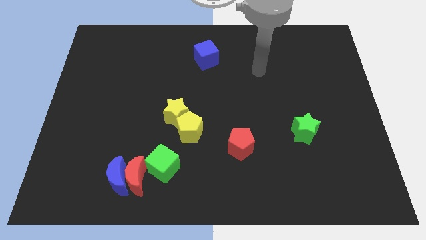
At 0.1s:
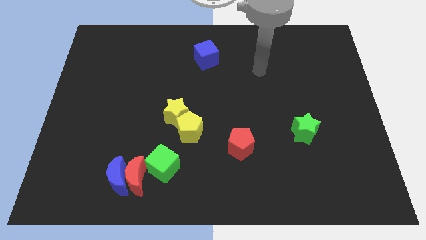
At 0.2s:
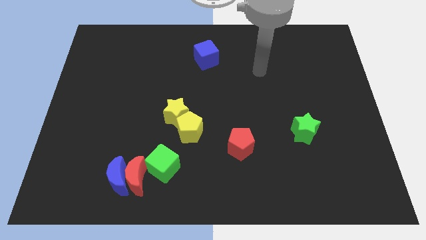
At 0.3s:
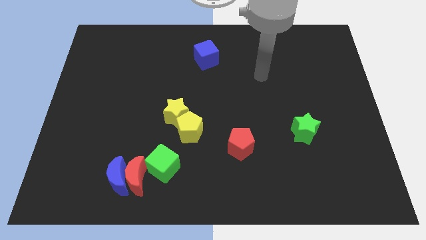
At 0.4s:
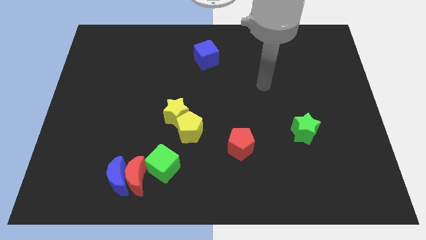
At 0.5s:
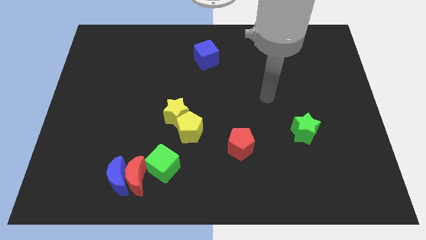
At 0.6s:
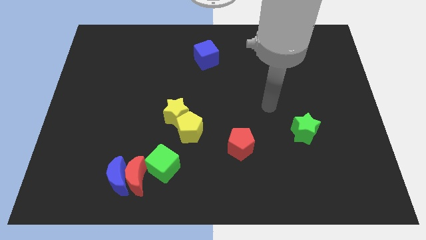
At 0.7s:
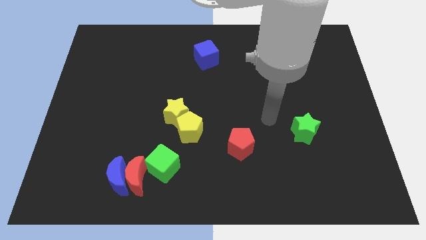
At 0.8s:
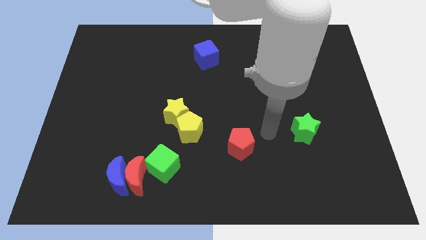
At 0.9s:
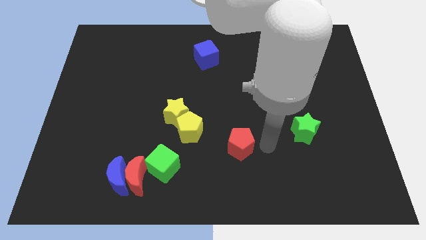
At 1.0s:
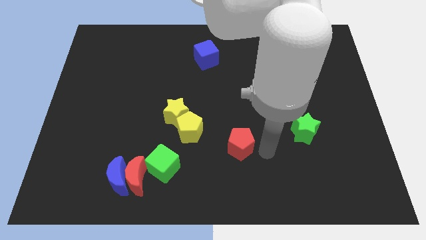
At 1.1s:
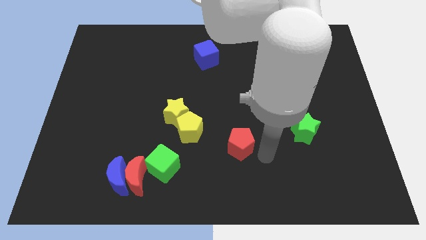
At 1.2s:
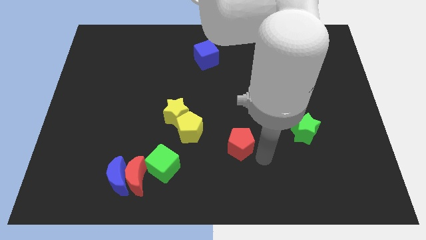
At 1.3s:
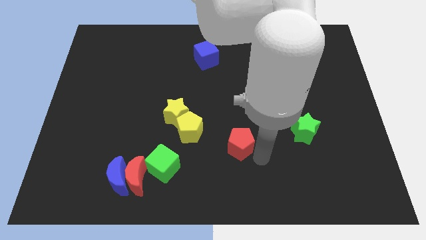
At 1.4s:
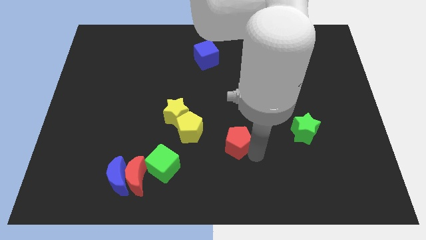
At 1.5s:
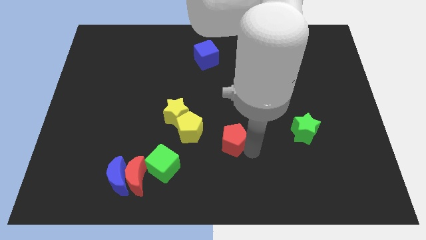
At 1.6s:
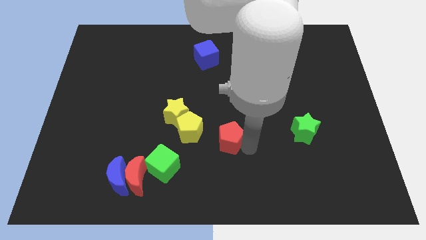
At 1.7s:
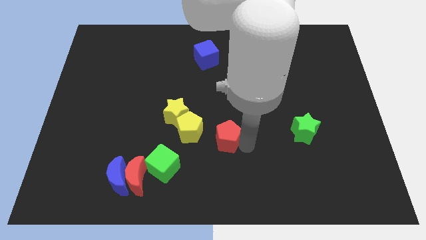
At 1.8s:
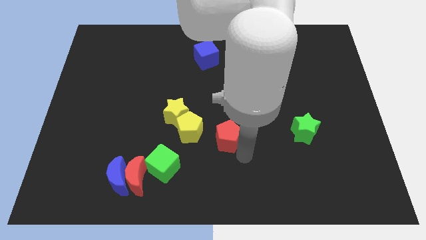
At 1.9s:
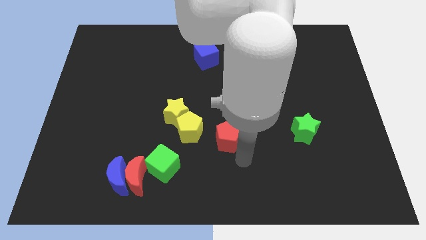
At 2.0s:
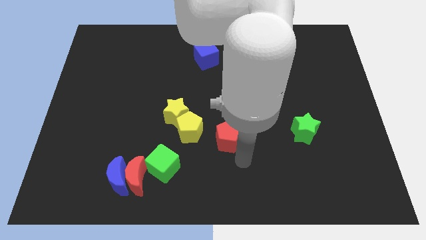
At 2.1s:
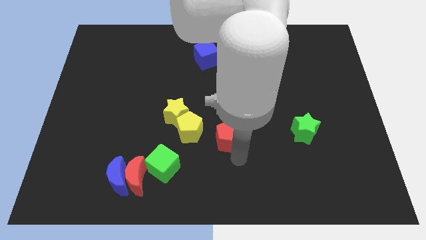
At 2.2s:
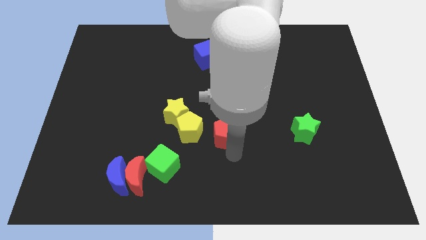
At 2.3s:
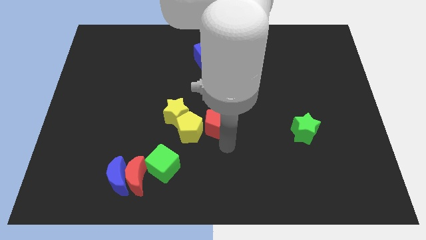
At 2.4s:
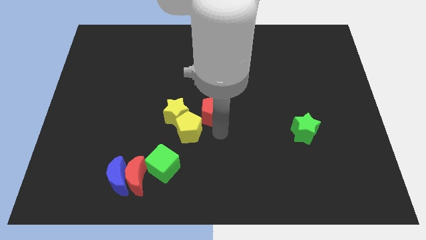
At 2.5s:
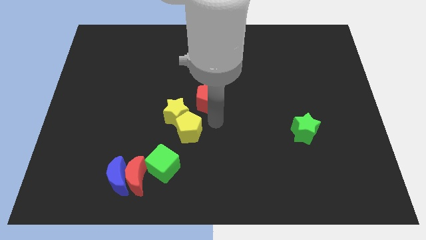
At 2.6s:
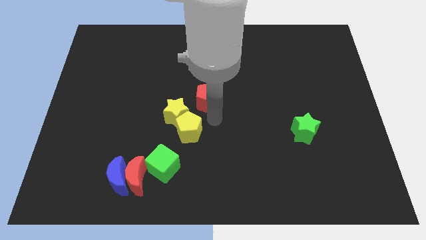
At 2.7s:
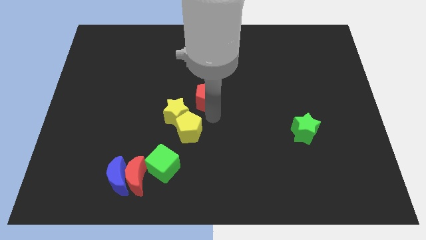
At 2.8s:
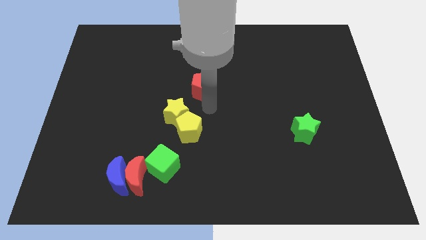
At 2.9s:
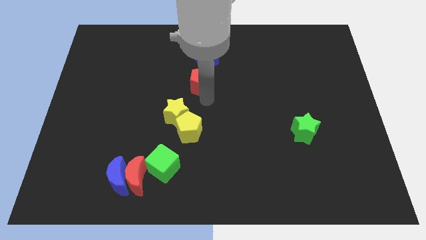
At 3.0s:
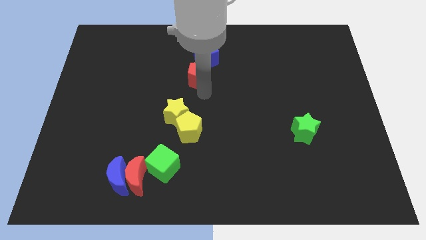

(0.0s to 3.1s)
move red pentagon near blue cube

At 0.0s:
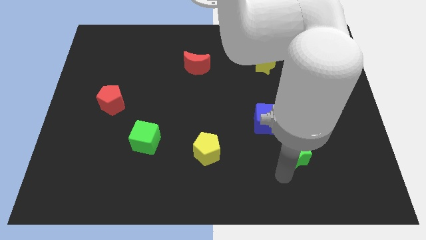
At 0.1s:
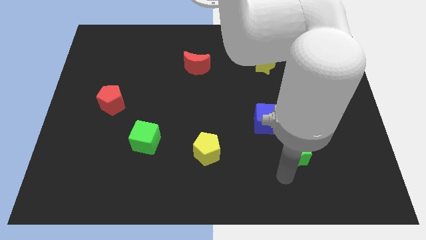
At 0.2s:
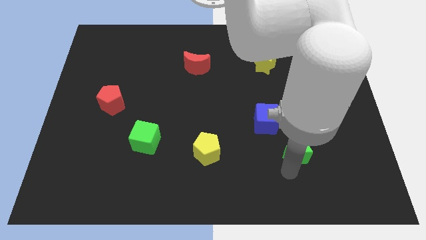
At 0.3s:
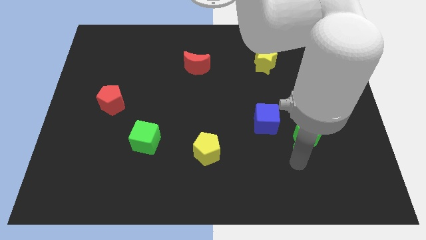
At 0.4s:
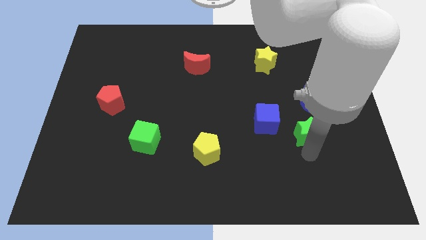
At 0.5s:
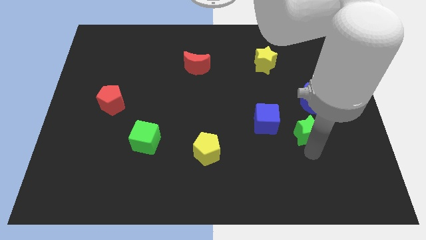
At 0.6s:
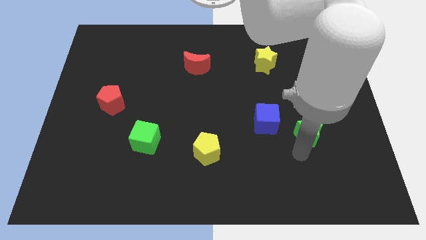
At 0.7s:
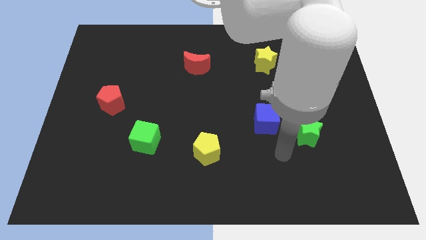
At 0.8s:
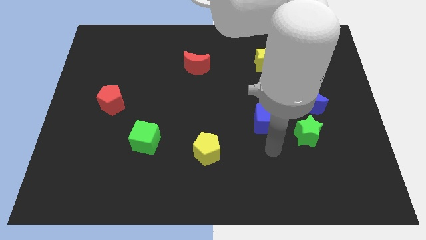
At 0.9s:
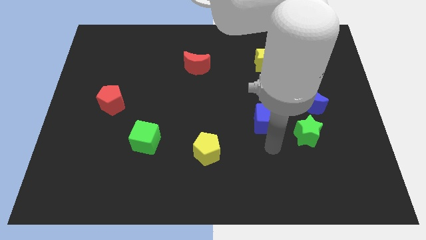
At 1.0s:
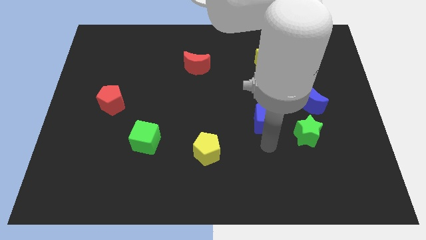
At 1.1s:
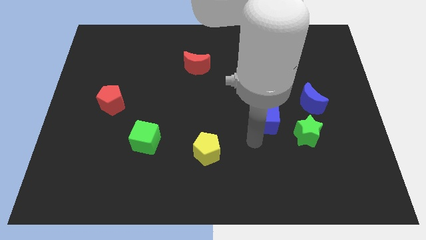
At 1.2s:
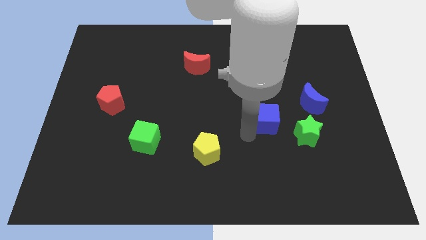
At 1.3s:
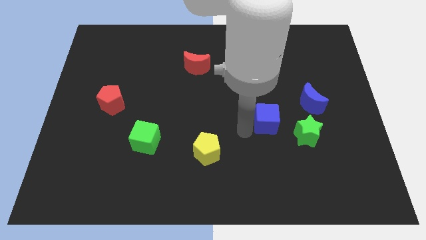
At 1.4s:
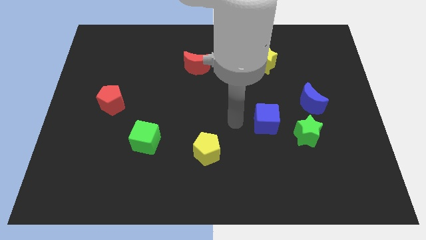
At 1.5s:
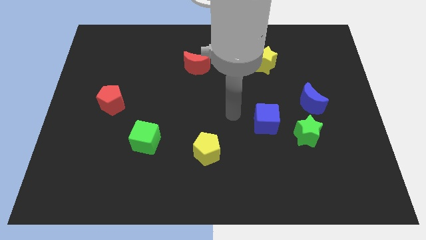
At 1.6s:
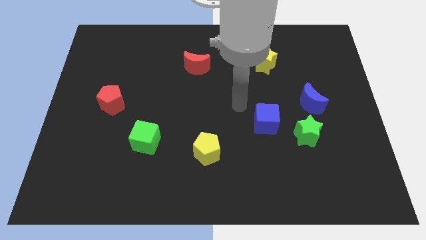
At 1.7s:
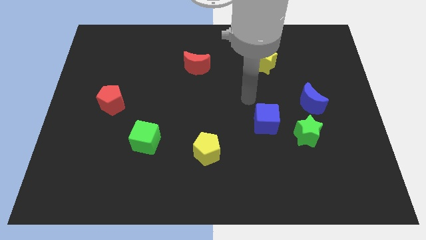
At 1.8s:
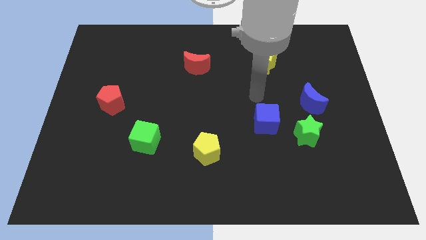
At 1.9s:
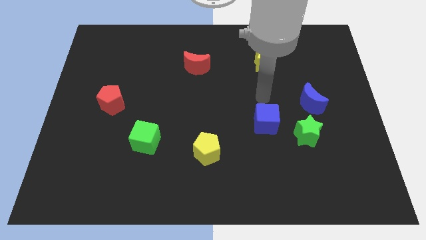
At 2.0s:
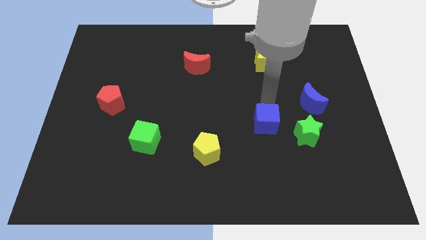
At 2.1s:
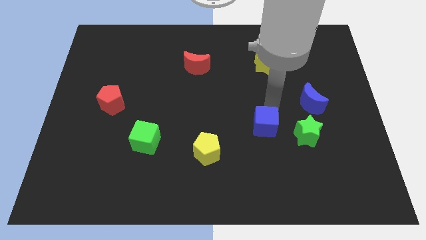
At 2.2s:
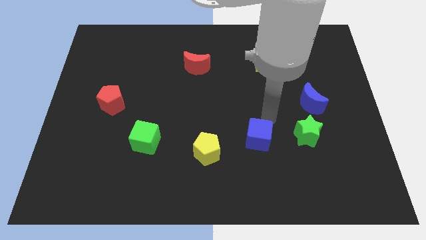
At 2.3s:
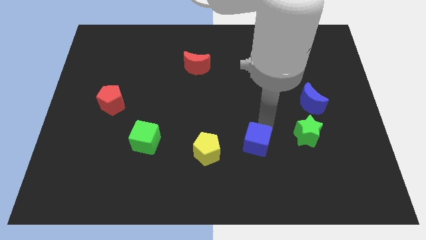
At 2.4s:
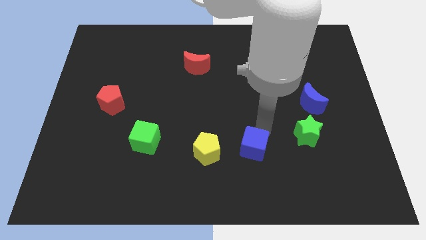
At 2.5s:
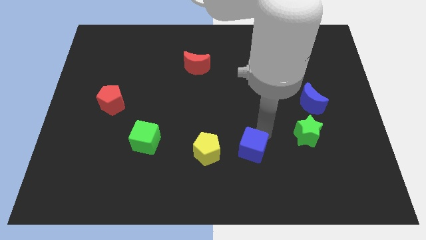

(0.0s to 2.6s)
move the blue cube right to the yellow pentagon

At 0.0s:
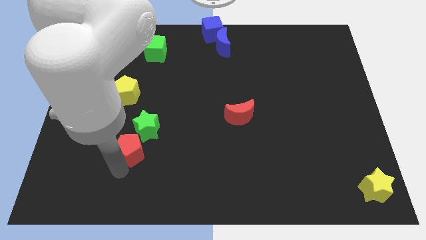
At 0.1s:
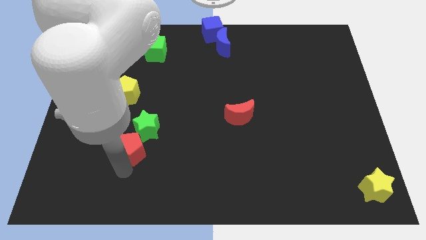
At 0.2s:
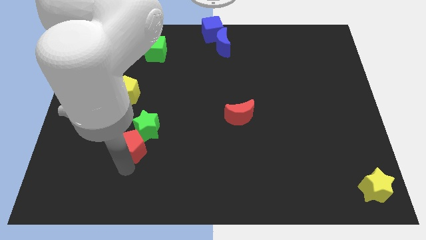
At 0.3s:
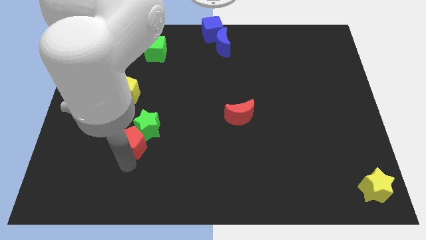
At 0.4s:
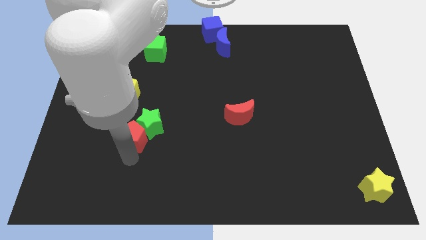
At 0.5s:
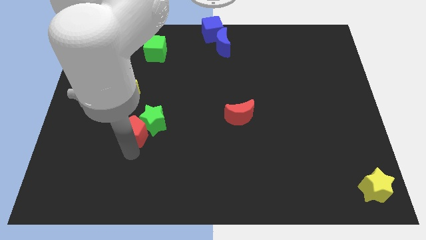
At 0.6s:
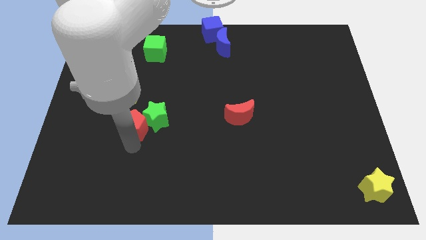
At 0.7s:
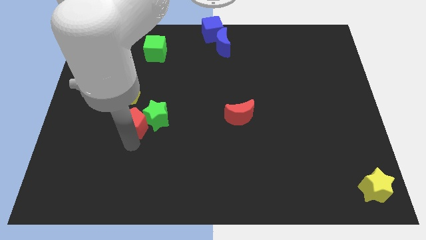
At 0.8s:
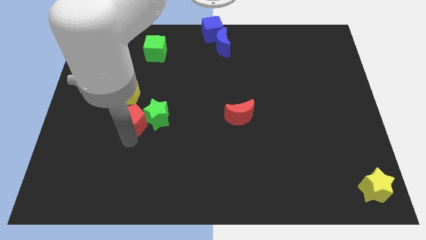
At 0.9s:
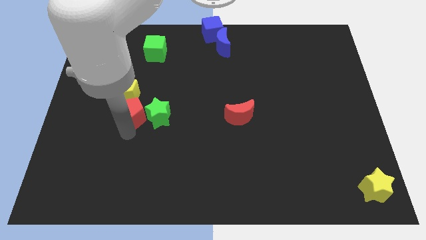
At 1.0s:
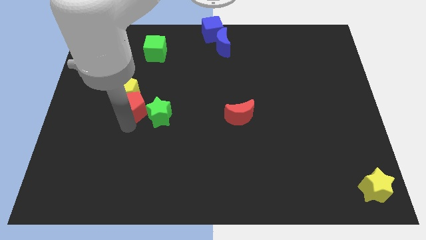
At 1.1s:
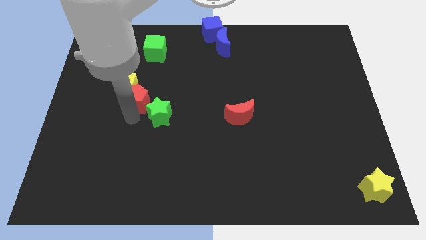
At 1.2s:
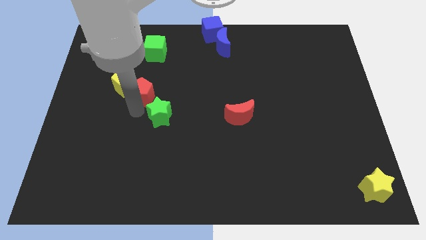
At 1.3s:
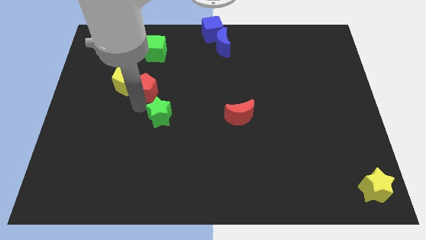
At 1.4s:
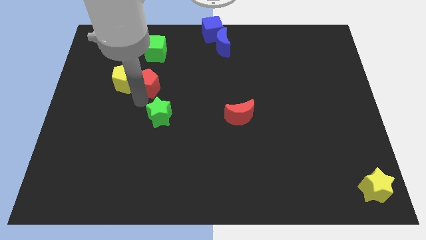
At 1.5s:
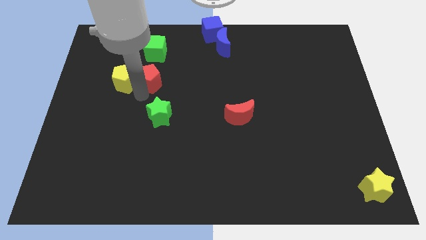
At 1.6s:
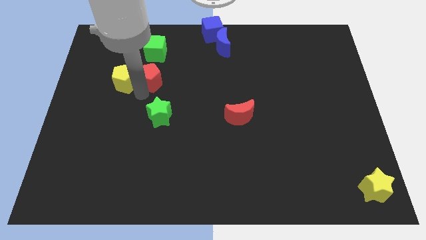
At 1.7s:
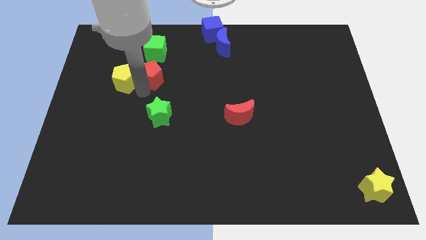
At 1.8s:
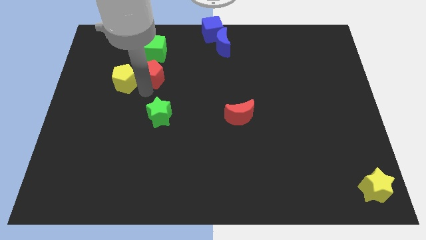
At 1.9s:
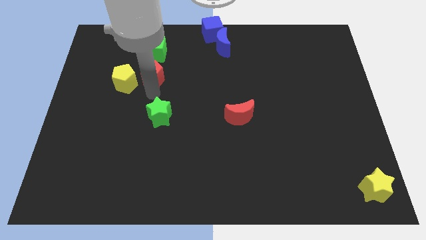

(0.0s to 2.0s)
place the red pentagon in between the green cube and green star

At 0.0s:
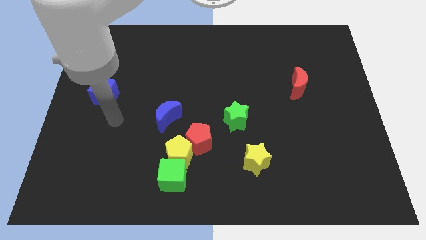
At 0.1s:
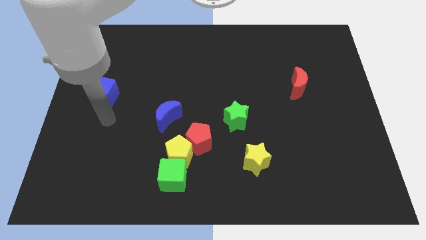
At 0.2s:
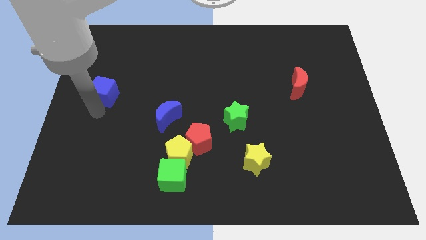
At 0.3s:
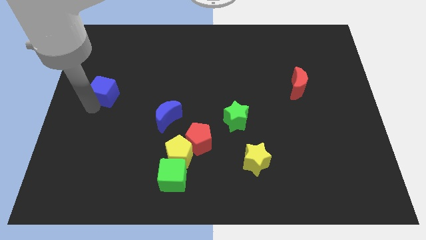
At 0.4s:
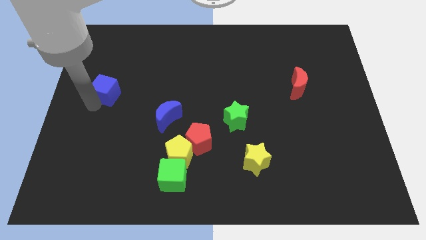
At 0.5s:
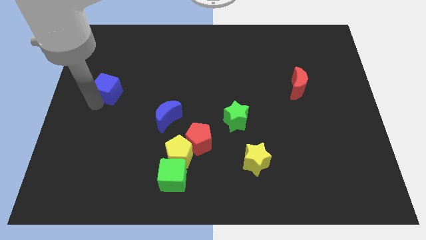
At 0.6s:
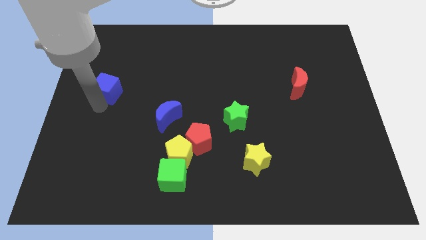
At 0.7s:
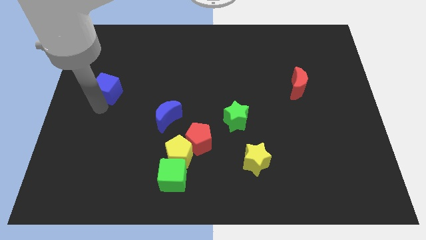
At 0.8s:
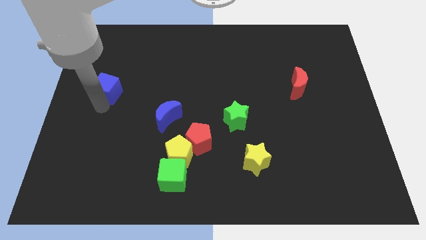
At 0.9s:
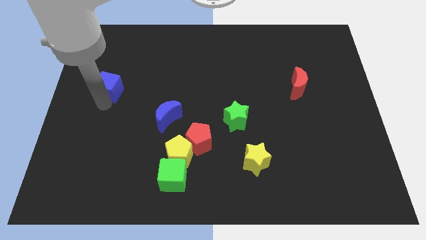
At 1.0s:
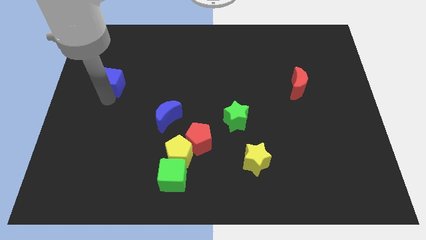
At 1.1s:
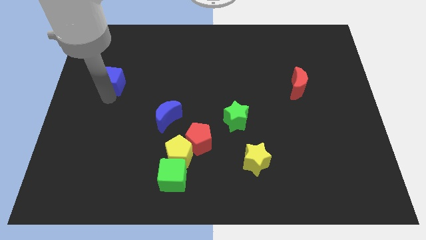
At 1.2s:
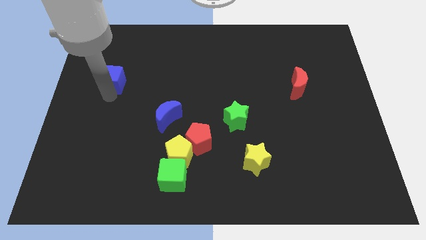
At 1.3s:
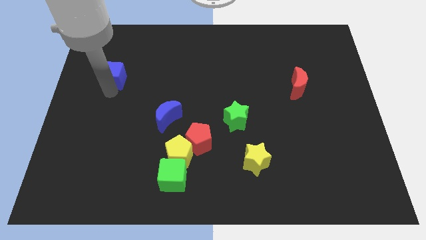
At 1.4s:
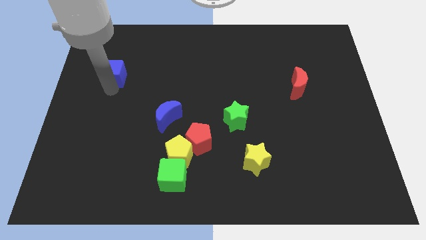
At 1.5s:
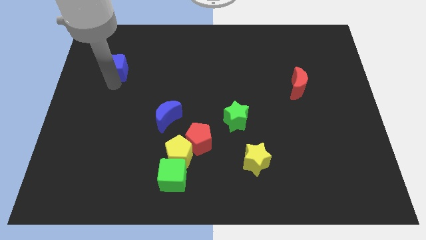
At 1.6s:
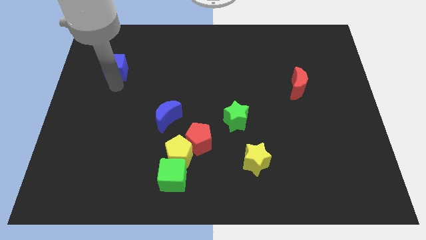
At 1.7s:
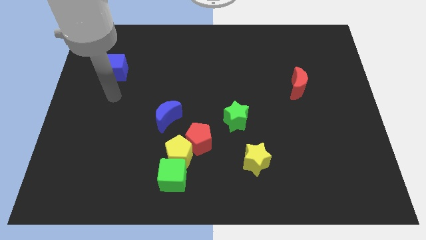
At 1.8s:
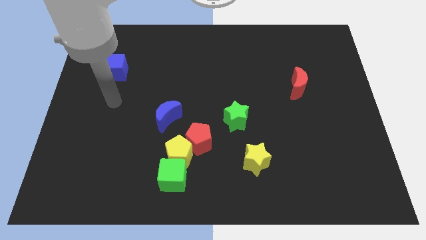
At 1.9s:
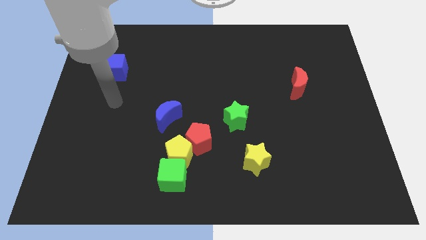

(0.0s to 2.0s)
place the blue cube at the top left of the blue moon
